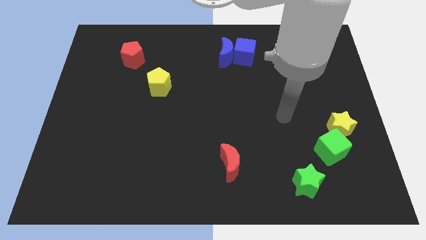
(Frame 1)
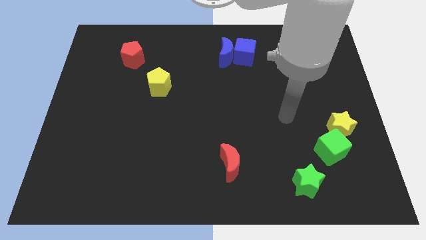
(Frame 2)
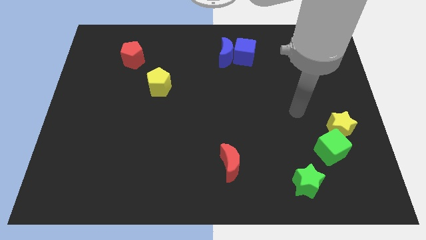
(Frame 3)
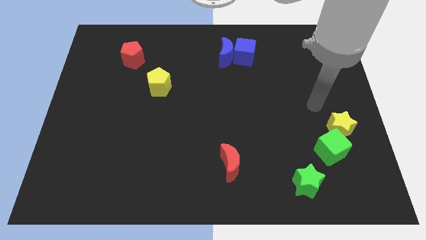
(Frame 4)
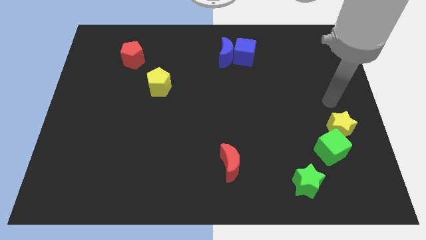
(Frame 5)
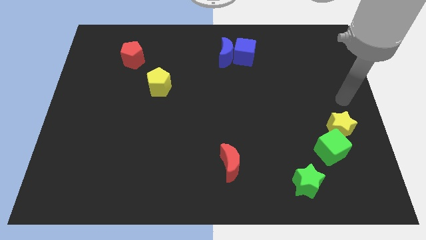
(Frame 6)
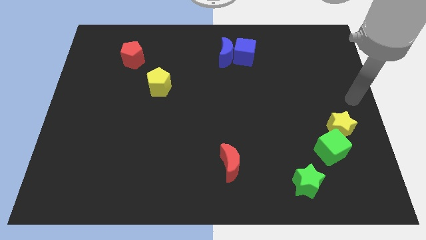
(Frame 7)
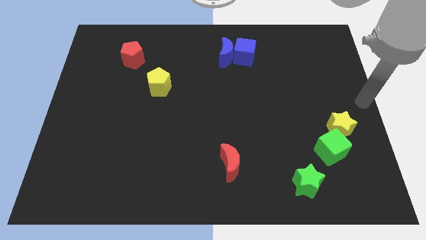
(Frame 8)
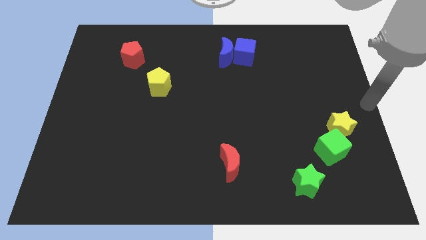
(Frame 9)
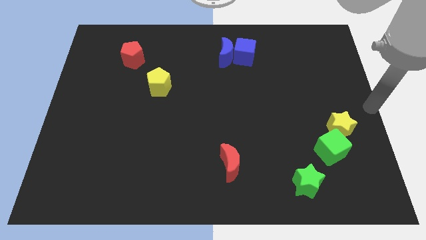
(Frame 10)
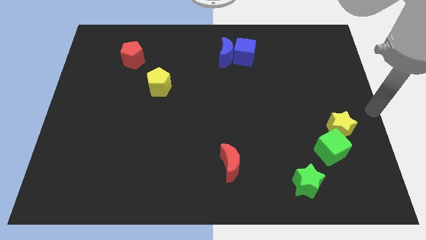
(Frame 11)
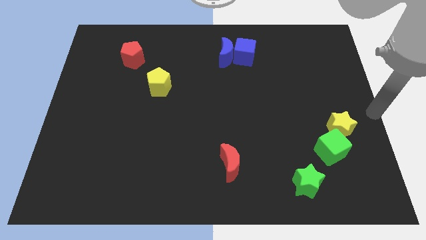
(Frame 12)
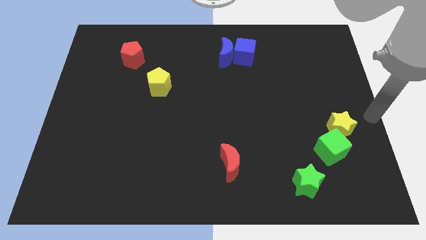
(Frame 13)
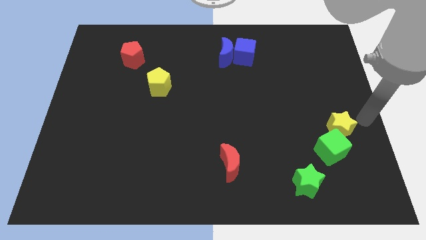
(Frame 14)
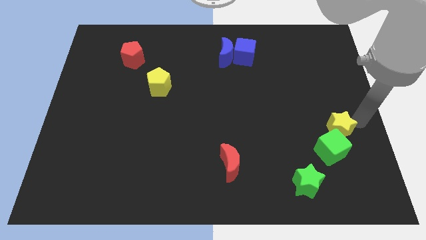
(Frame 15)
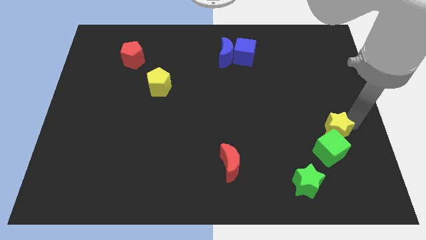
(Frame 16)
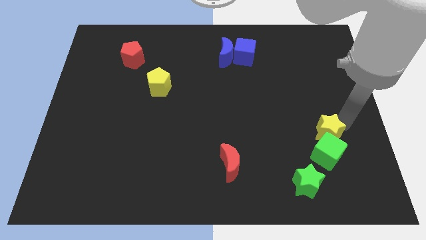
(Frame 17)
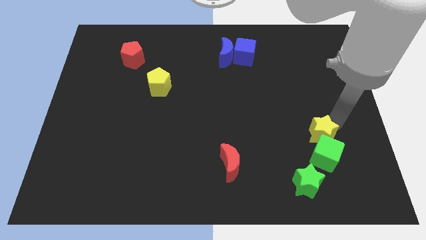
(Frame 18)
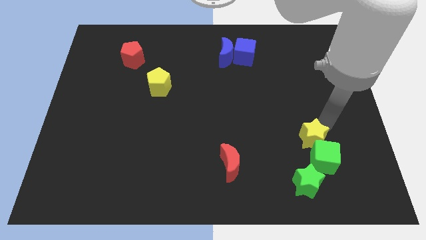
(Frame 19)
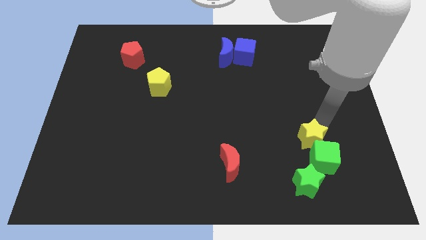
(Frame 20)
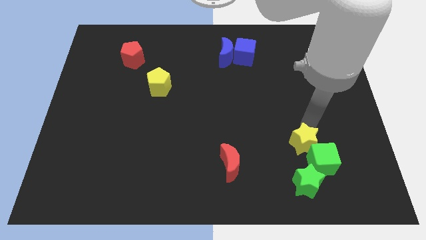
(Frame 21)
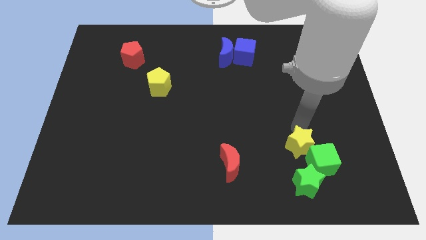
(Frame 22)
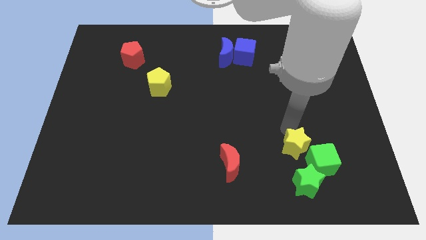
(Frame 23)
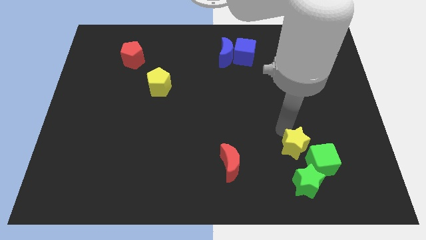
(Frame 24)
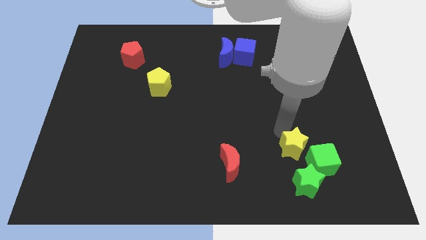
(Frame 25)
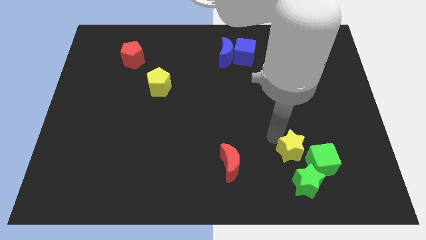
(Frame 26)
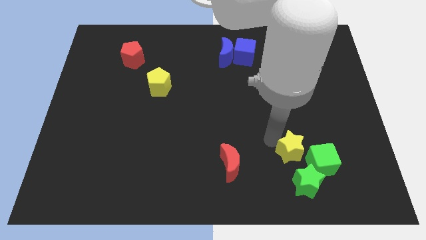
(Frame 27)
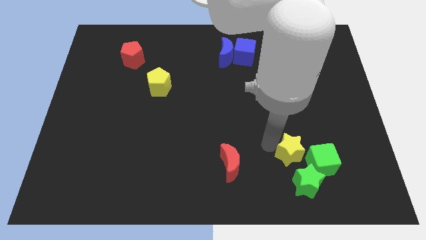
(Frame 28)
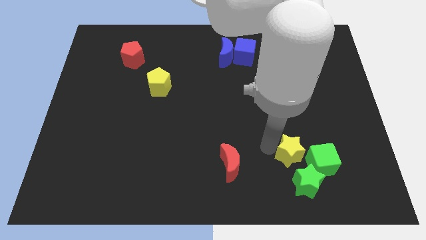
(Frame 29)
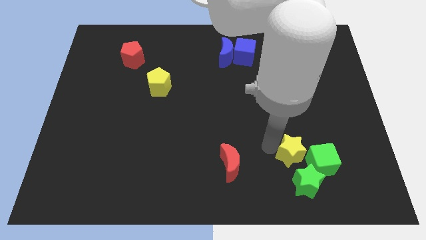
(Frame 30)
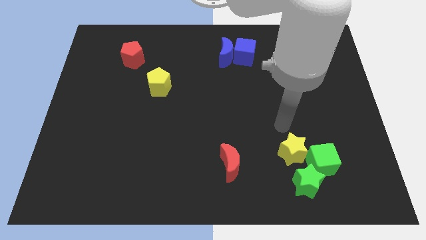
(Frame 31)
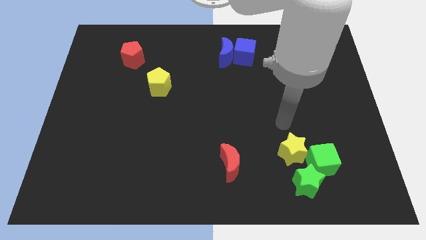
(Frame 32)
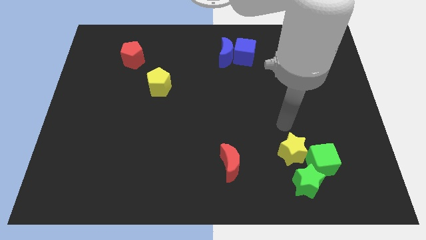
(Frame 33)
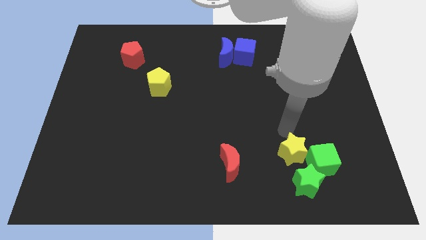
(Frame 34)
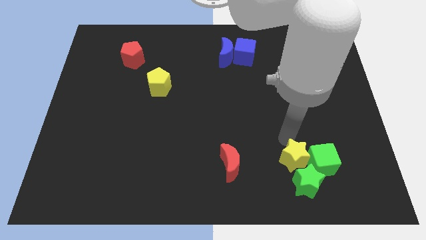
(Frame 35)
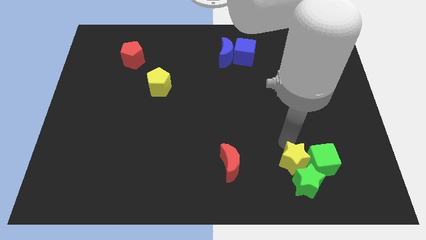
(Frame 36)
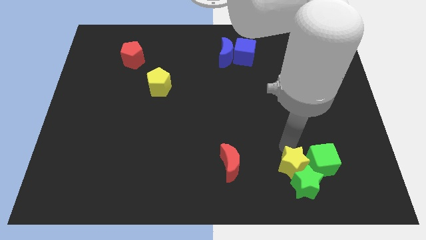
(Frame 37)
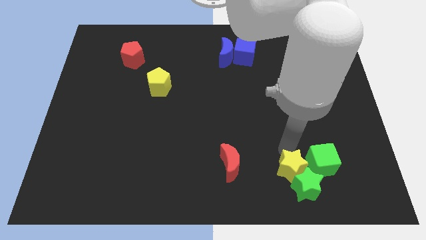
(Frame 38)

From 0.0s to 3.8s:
push the yellow star next to the green star

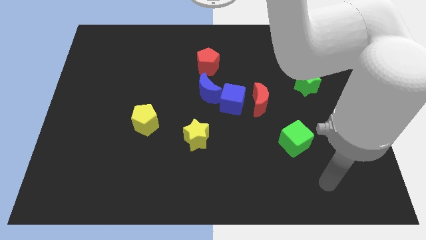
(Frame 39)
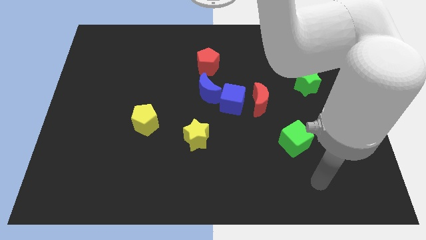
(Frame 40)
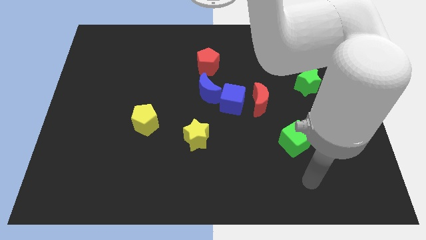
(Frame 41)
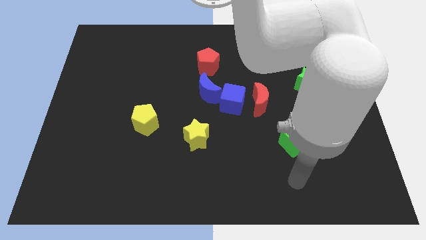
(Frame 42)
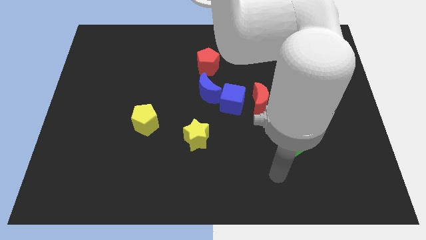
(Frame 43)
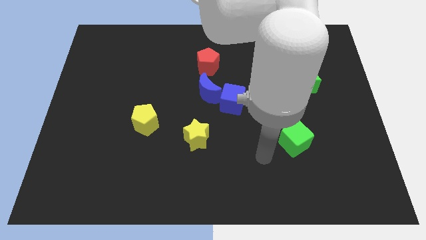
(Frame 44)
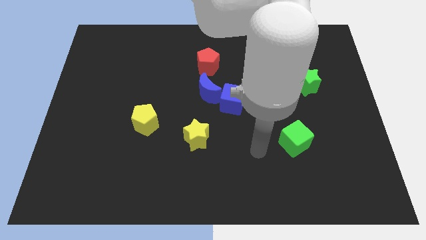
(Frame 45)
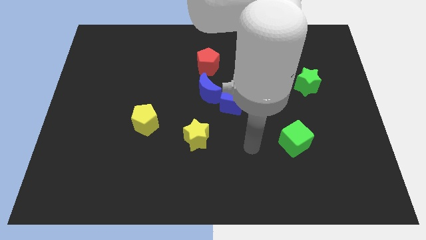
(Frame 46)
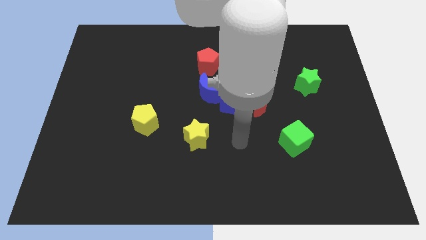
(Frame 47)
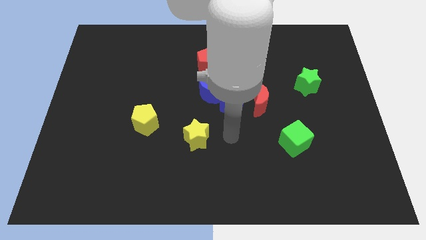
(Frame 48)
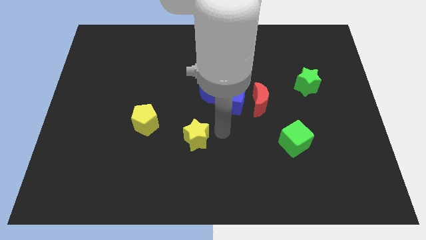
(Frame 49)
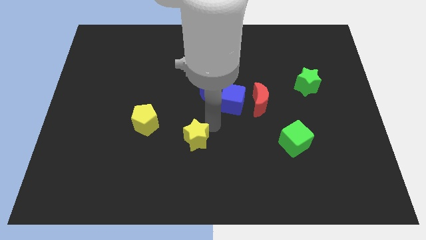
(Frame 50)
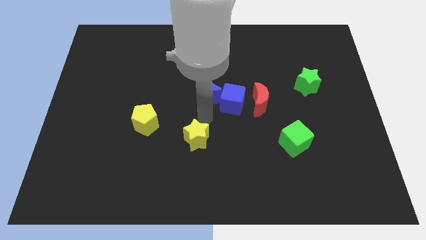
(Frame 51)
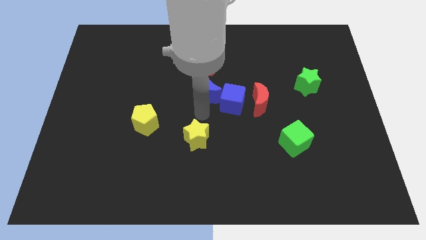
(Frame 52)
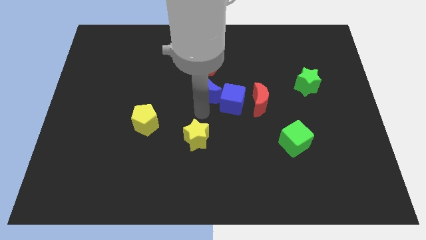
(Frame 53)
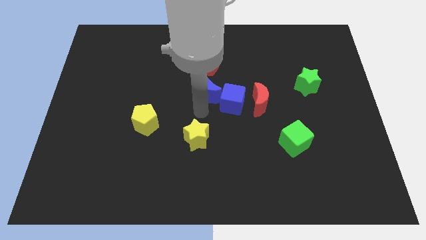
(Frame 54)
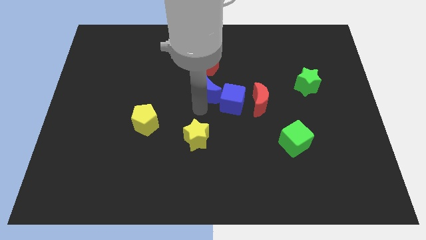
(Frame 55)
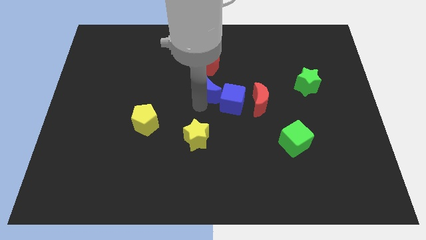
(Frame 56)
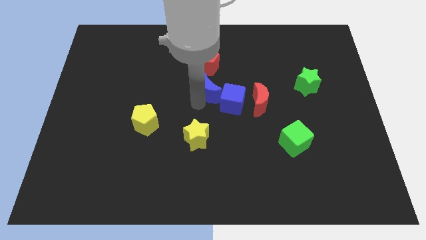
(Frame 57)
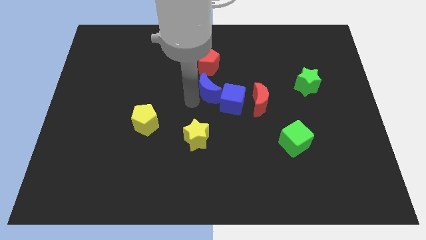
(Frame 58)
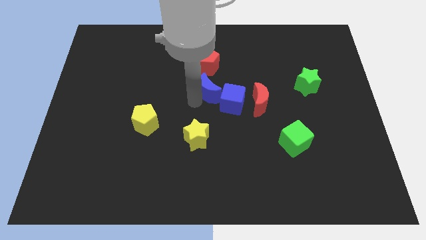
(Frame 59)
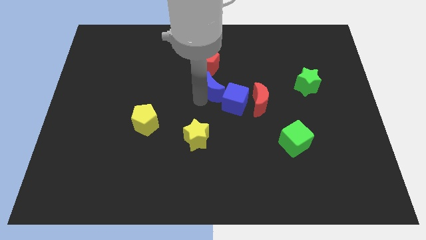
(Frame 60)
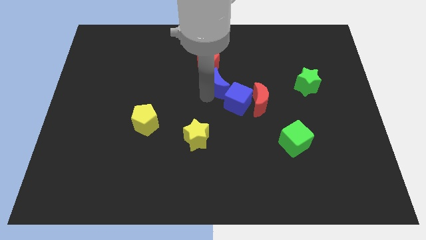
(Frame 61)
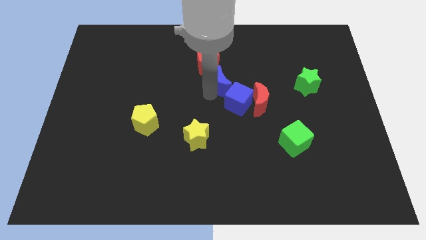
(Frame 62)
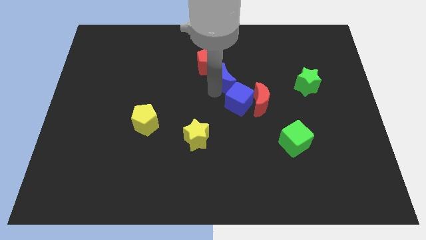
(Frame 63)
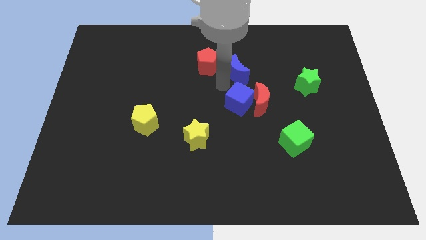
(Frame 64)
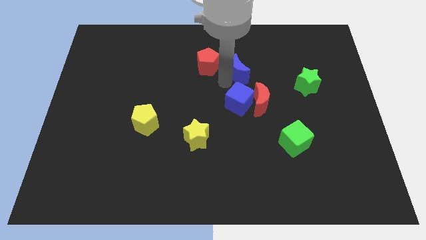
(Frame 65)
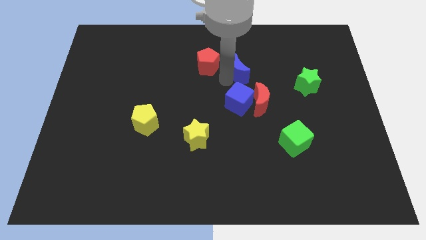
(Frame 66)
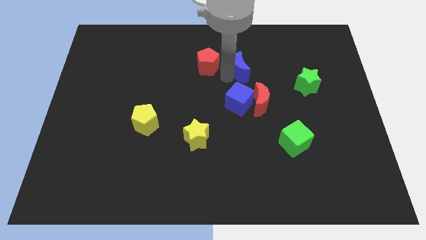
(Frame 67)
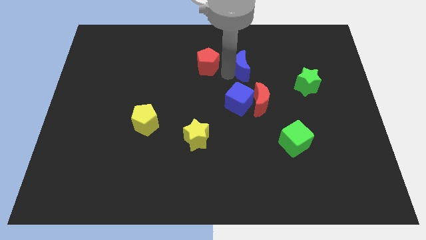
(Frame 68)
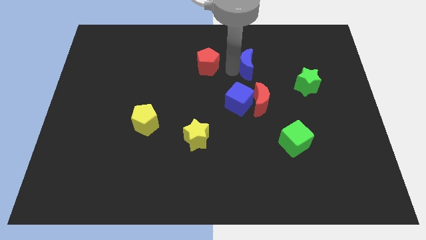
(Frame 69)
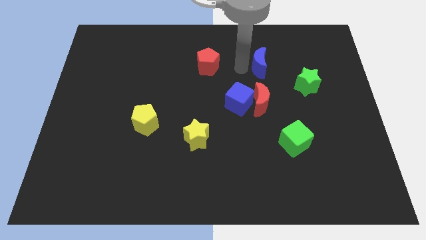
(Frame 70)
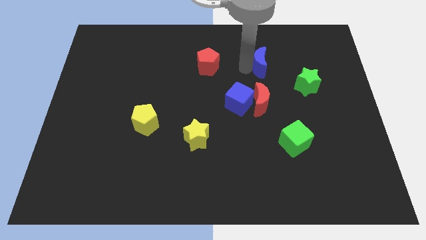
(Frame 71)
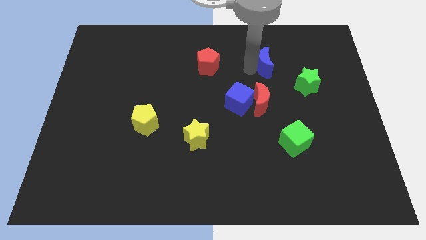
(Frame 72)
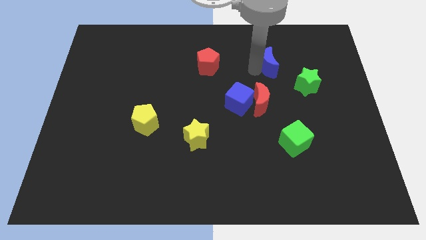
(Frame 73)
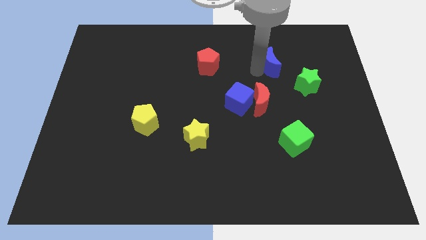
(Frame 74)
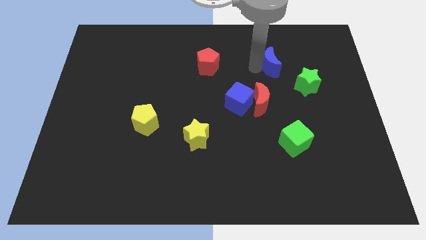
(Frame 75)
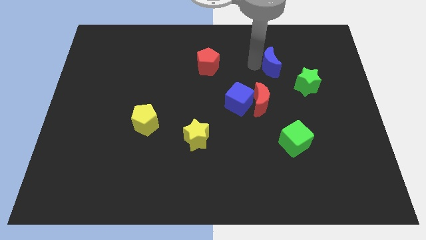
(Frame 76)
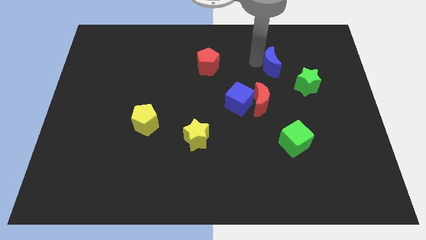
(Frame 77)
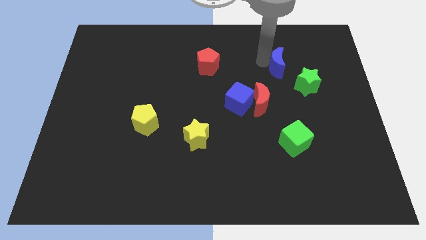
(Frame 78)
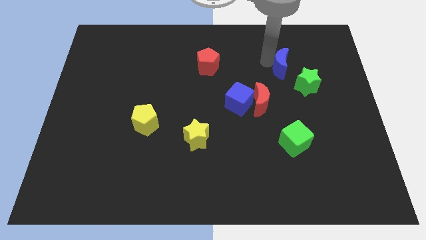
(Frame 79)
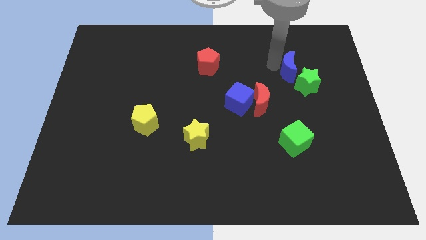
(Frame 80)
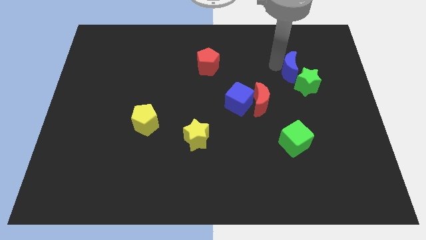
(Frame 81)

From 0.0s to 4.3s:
push the blue moon close to the green star

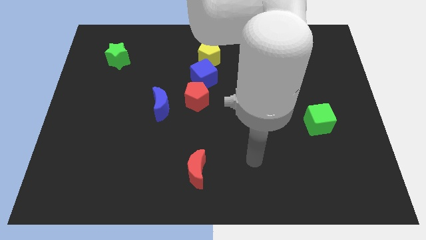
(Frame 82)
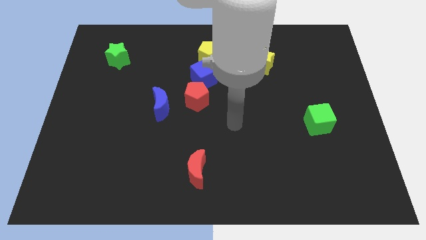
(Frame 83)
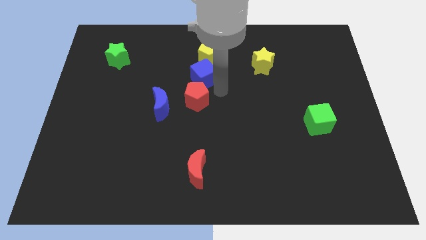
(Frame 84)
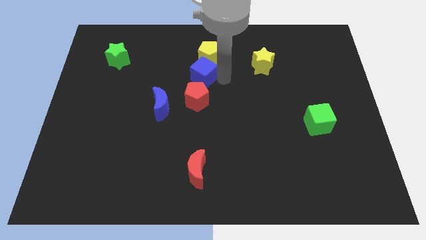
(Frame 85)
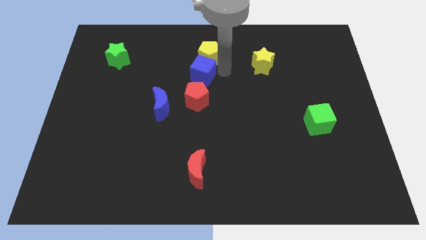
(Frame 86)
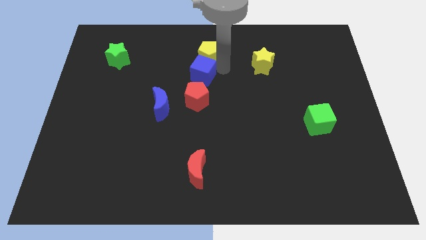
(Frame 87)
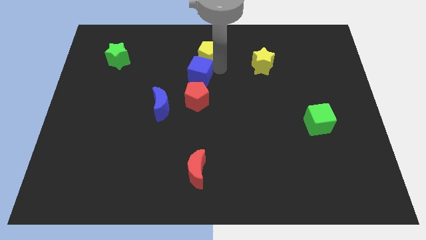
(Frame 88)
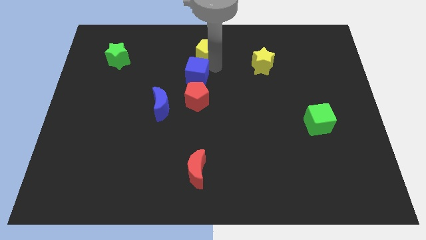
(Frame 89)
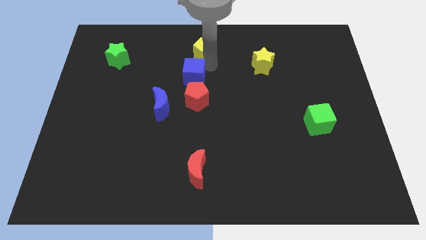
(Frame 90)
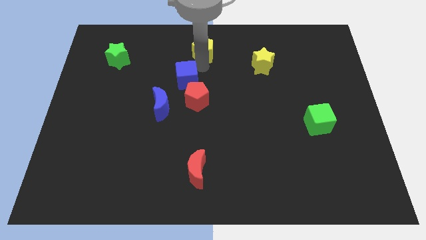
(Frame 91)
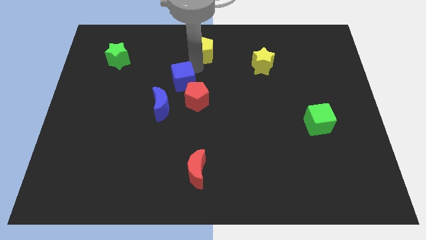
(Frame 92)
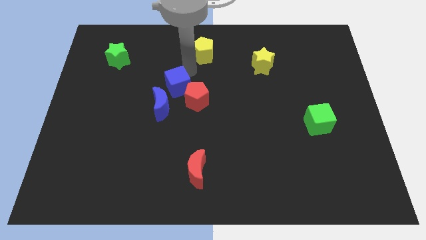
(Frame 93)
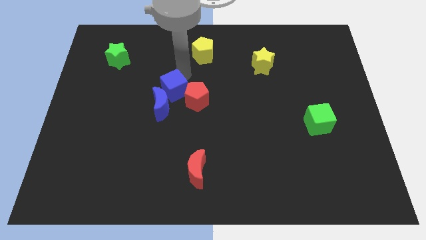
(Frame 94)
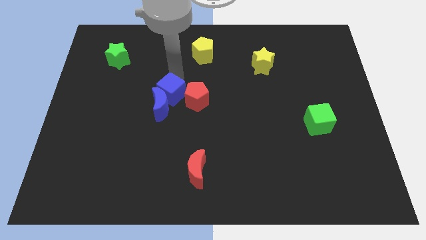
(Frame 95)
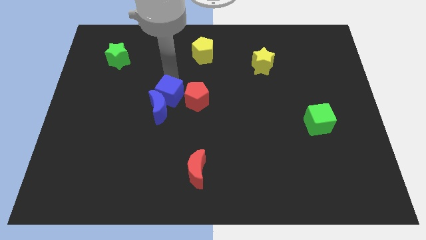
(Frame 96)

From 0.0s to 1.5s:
put the blue cube next to the blue moon
